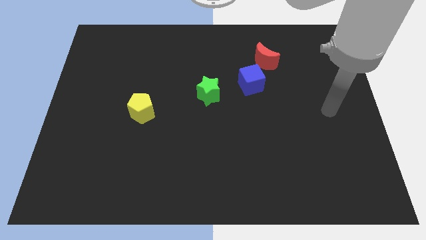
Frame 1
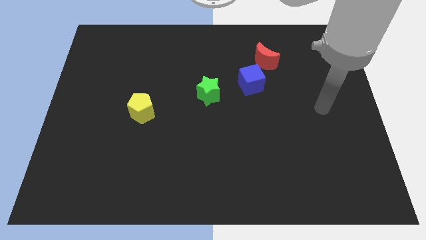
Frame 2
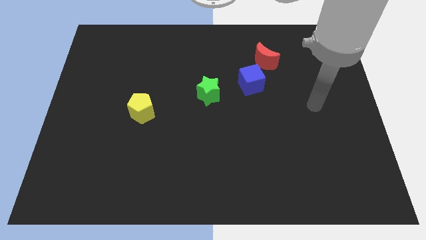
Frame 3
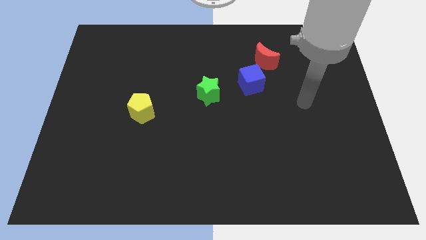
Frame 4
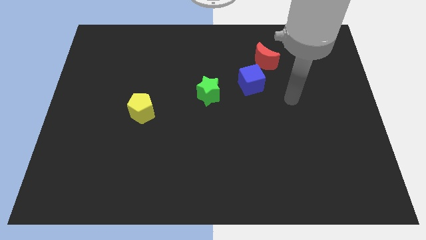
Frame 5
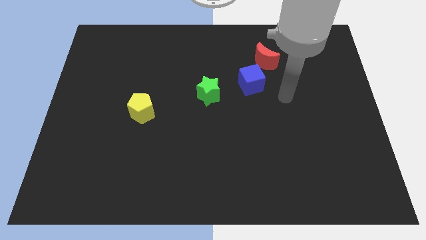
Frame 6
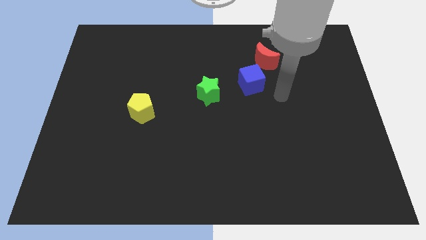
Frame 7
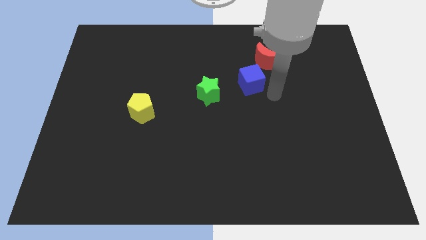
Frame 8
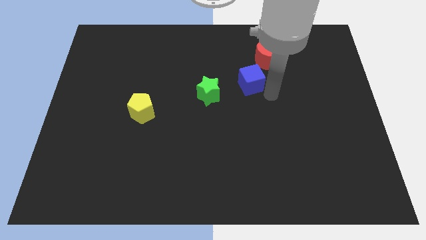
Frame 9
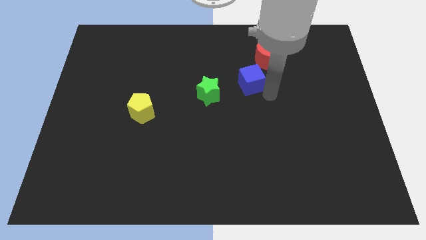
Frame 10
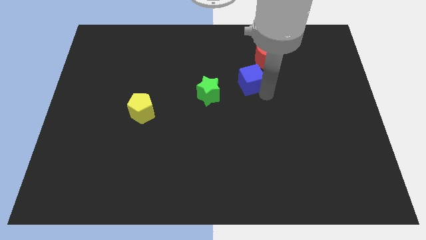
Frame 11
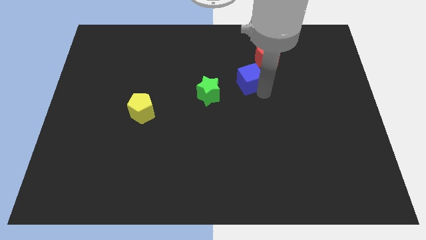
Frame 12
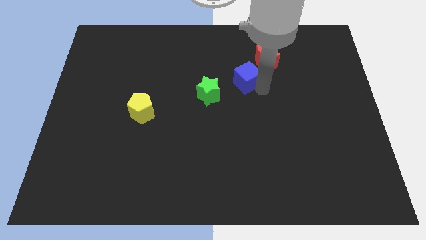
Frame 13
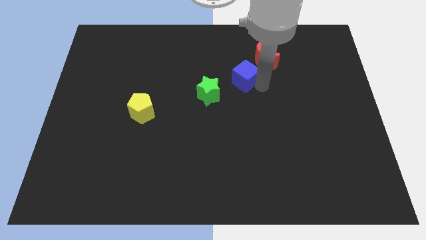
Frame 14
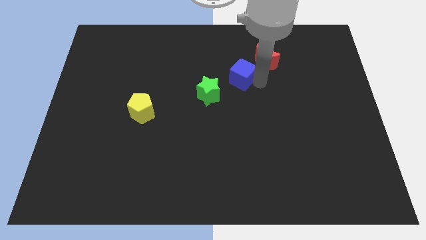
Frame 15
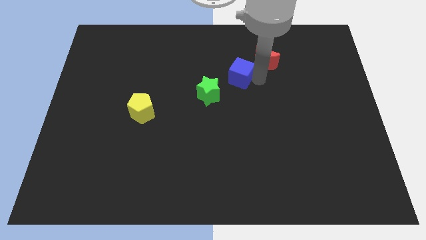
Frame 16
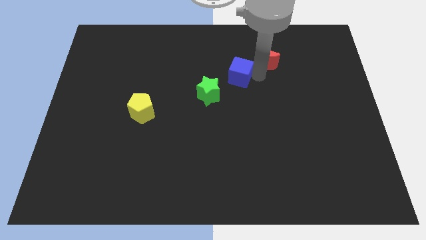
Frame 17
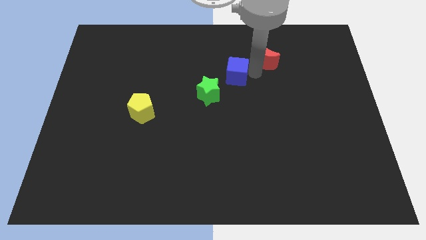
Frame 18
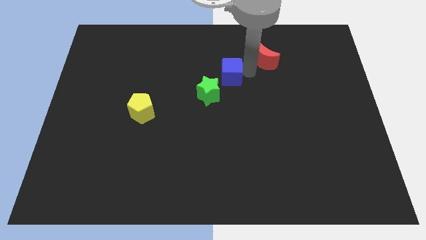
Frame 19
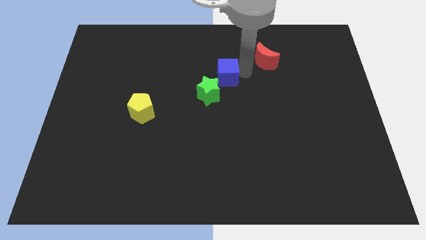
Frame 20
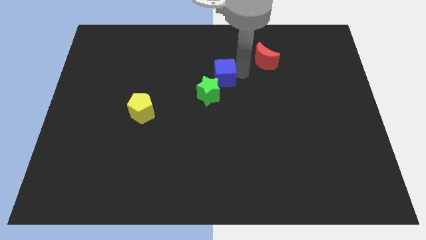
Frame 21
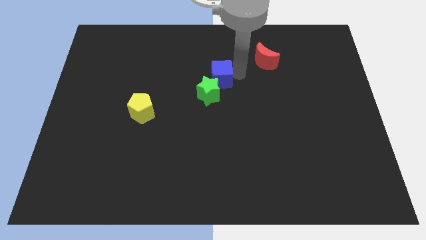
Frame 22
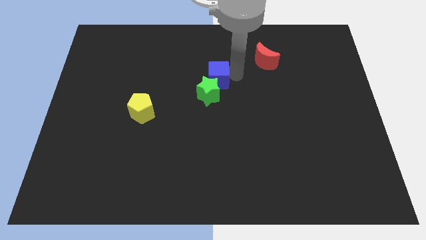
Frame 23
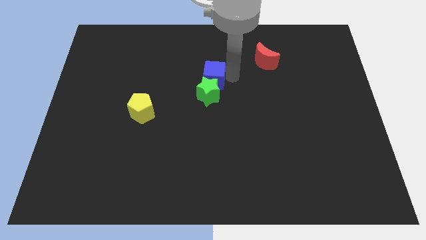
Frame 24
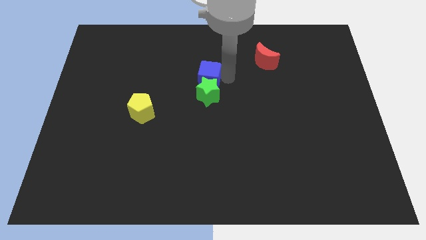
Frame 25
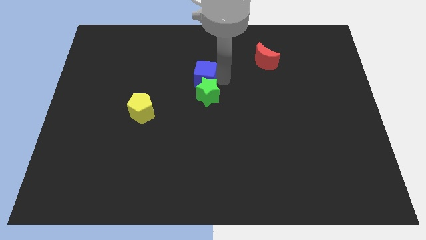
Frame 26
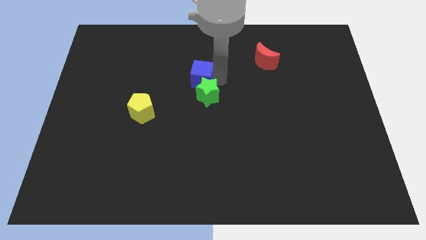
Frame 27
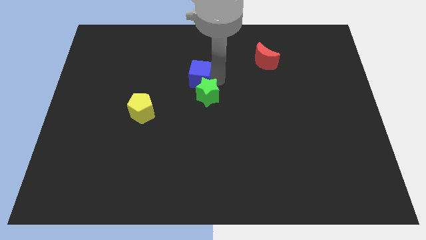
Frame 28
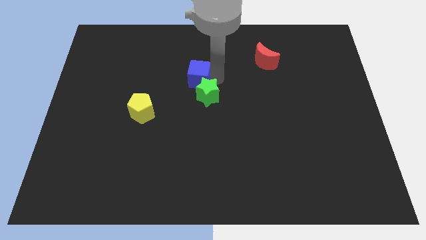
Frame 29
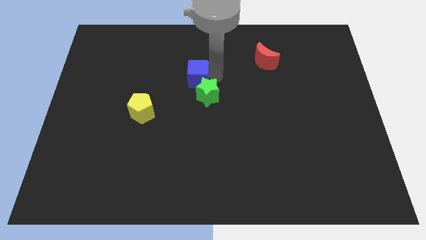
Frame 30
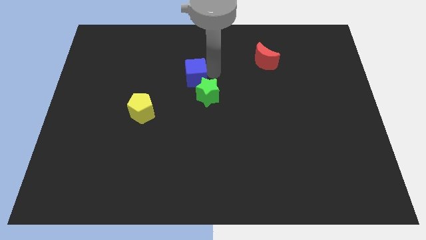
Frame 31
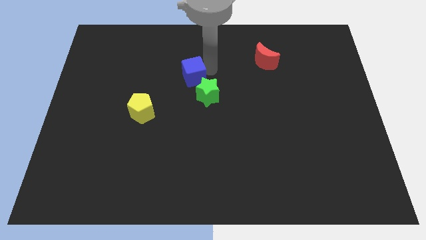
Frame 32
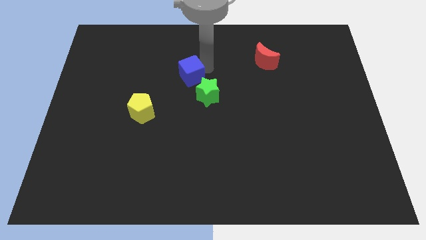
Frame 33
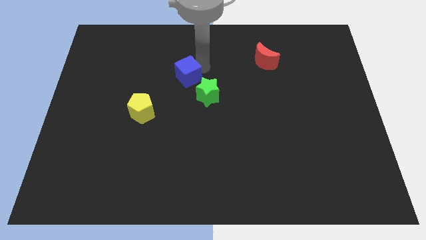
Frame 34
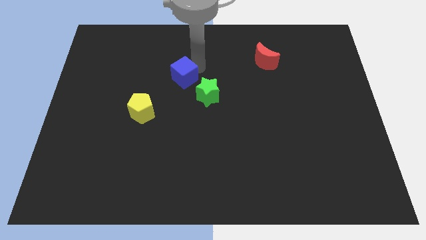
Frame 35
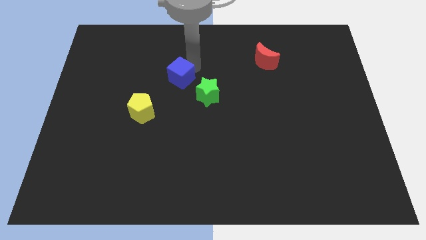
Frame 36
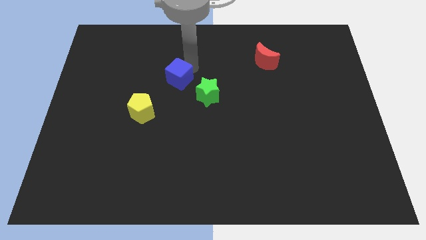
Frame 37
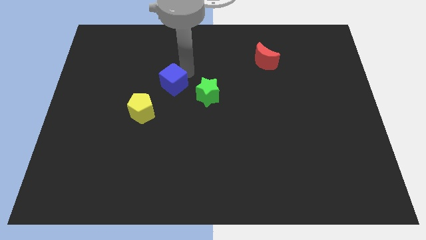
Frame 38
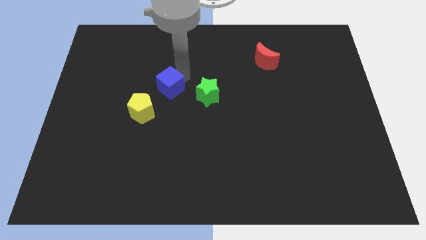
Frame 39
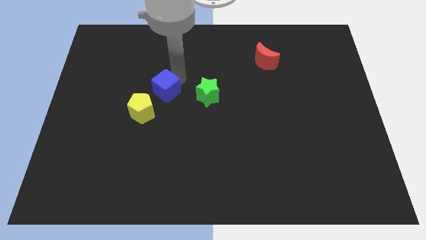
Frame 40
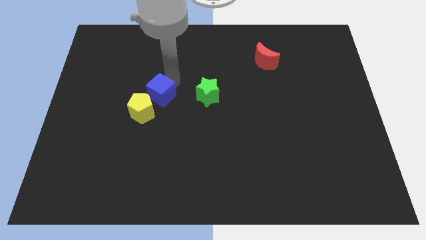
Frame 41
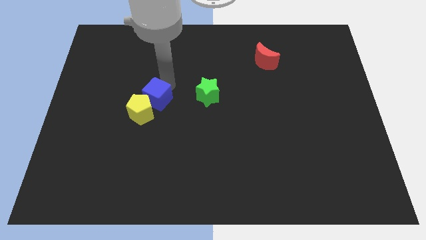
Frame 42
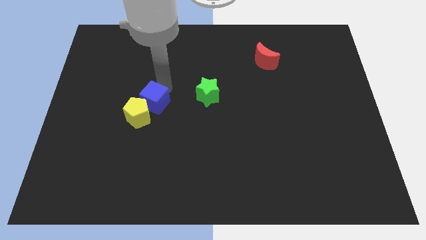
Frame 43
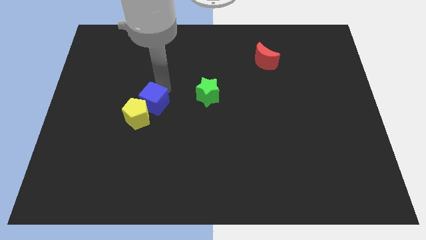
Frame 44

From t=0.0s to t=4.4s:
move the blue cube towards the yellow pentagon

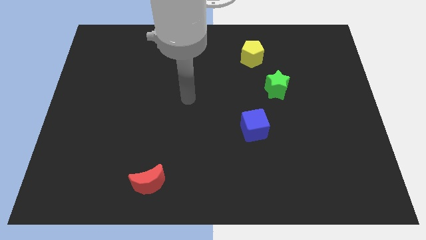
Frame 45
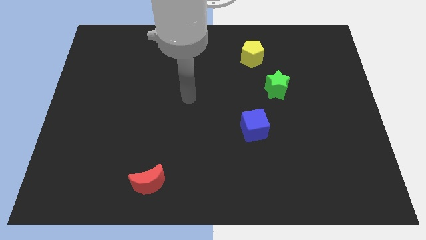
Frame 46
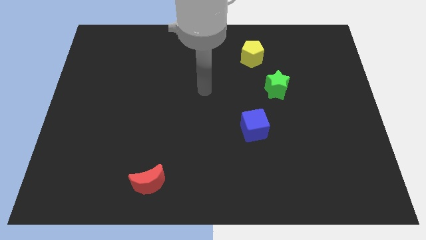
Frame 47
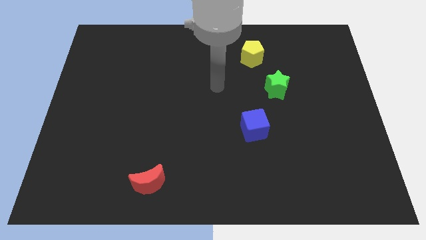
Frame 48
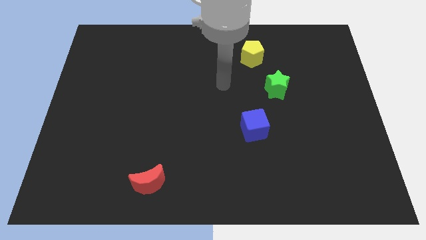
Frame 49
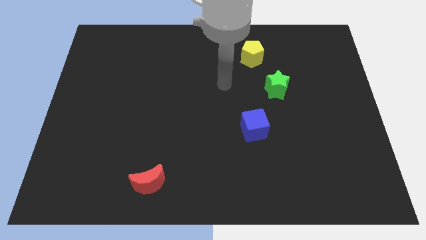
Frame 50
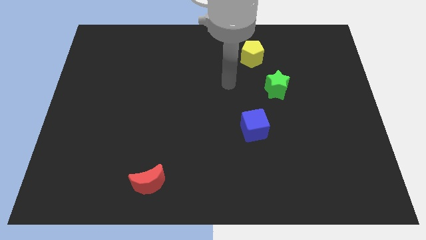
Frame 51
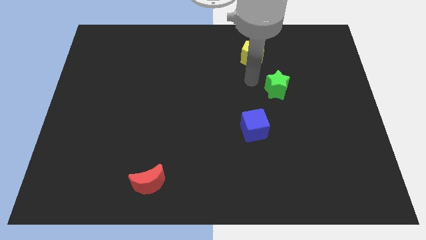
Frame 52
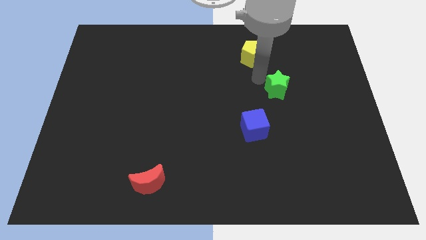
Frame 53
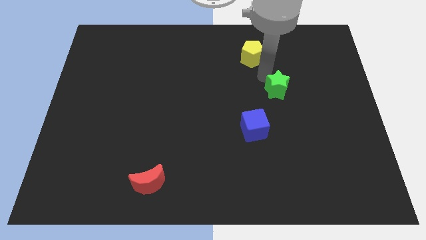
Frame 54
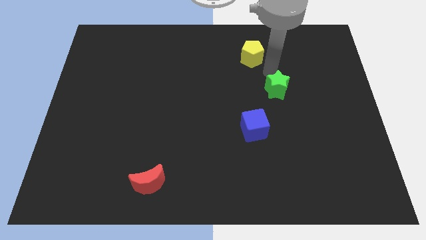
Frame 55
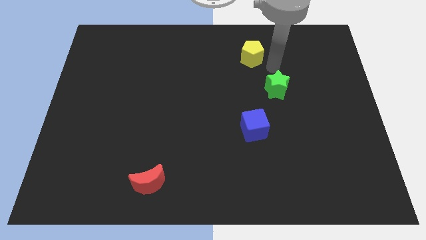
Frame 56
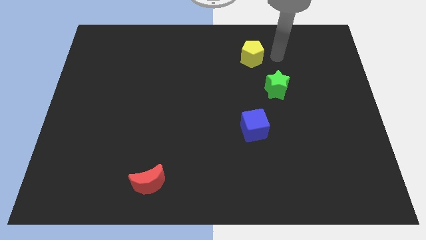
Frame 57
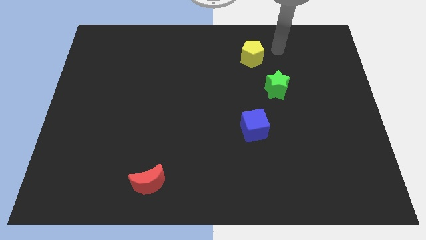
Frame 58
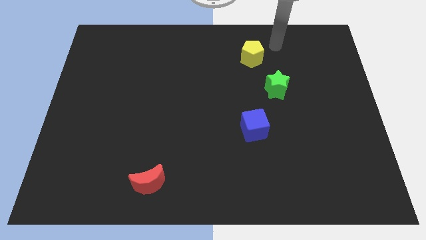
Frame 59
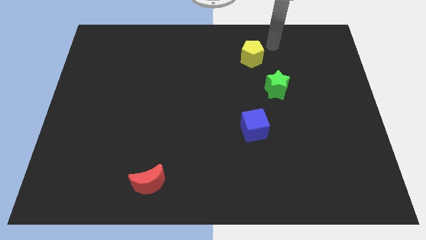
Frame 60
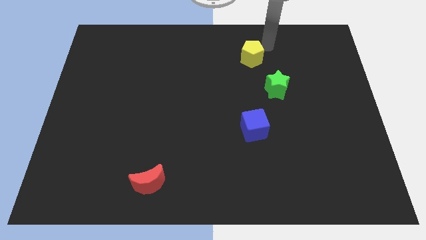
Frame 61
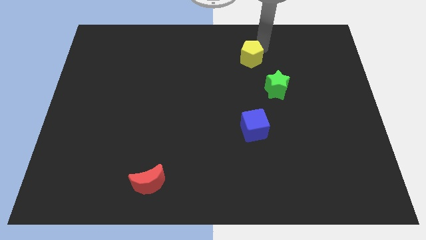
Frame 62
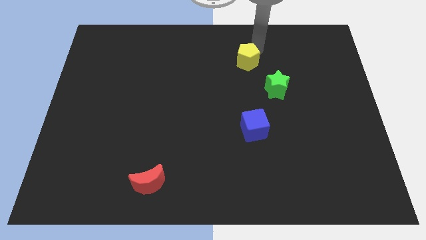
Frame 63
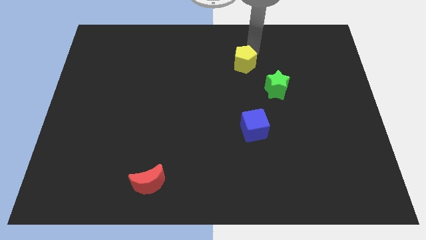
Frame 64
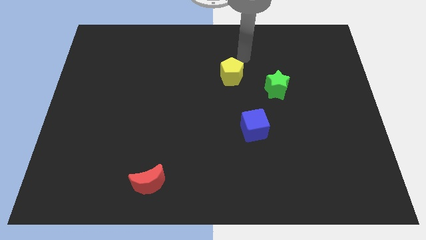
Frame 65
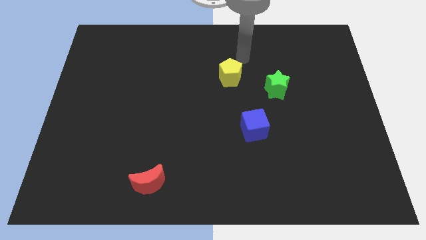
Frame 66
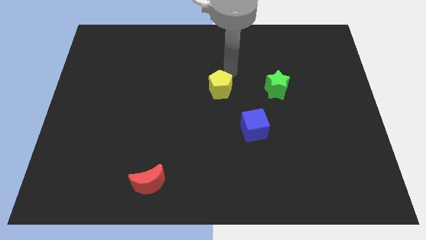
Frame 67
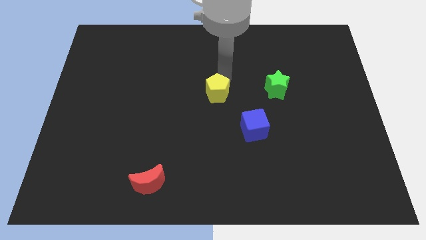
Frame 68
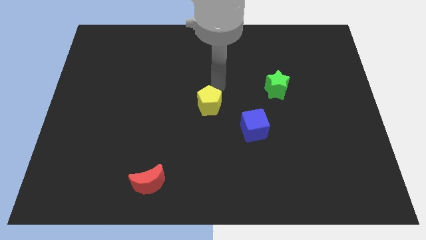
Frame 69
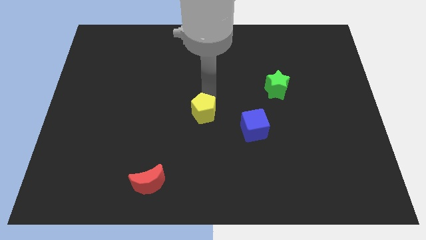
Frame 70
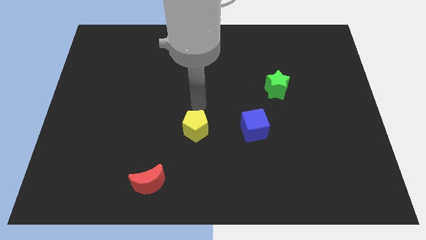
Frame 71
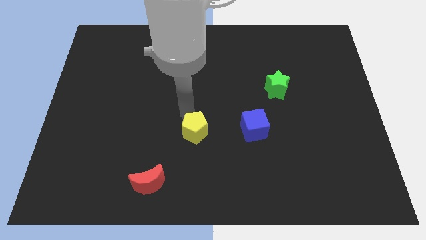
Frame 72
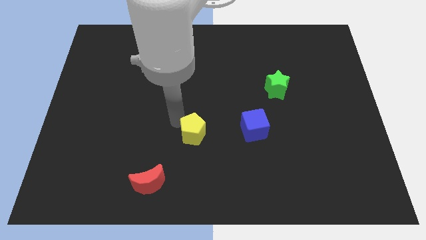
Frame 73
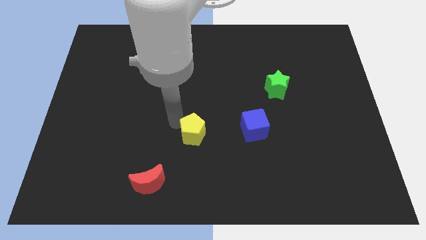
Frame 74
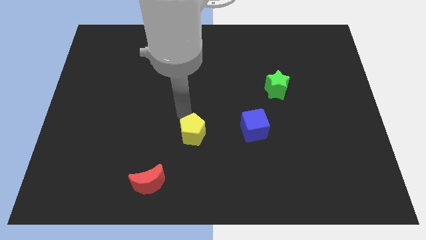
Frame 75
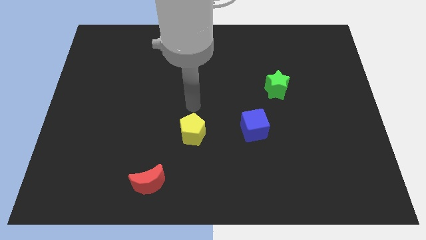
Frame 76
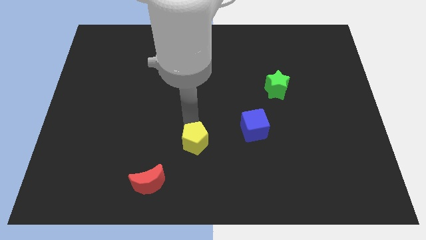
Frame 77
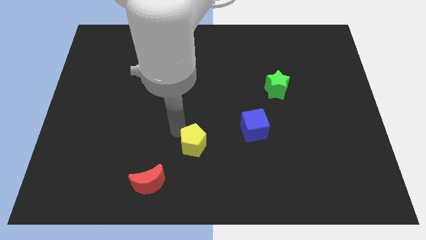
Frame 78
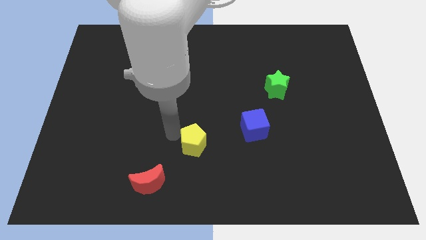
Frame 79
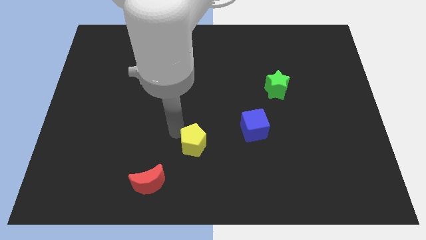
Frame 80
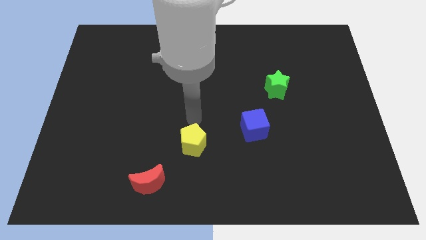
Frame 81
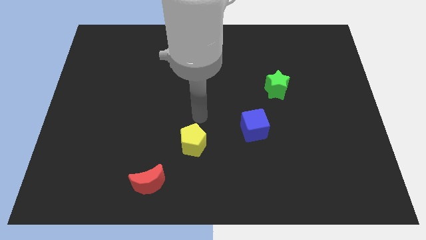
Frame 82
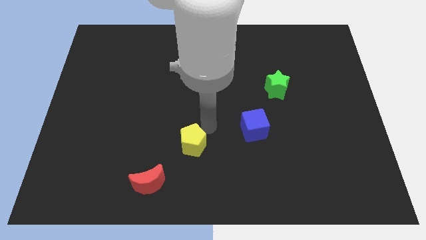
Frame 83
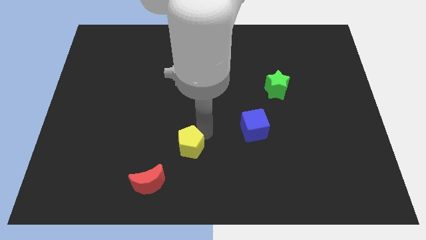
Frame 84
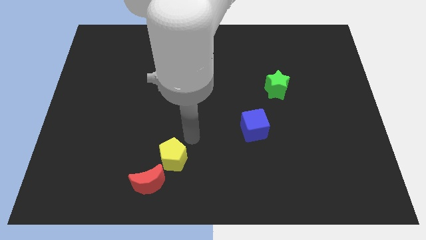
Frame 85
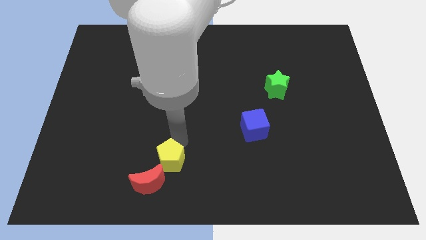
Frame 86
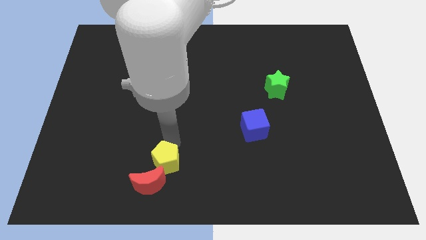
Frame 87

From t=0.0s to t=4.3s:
move the yellow pentagon close to the red block
